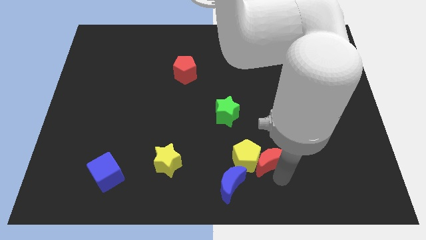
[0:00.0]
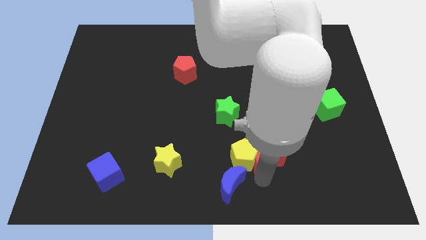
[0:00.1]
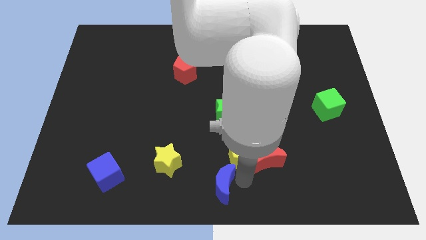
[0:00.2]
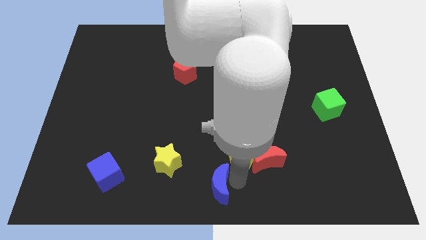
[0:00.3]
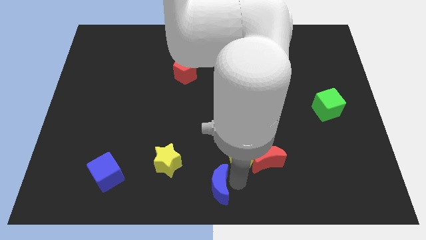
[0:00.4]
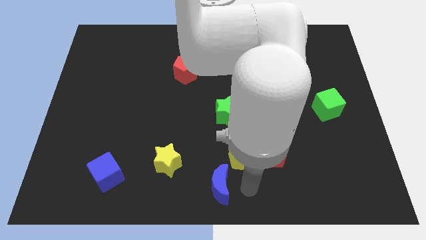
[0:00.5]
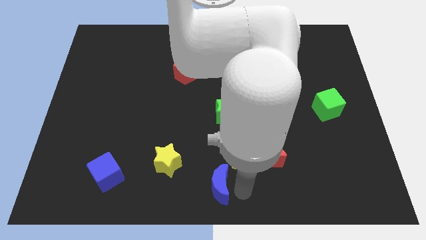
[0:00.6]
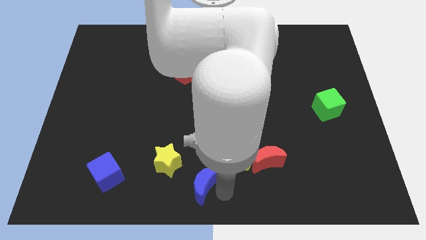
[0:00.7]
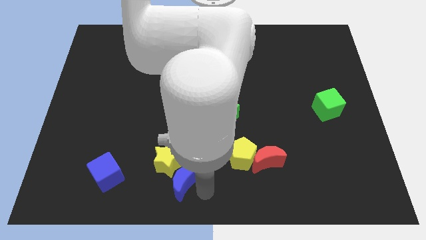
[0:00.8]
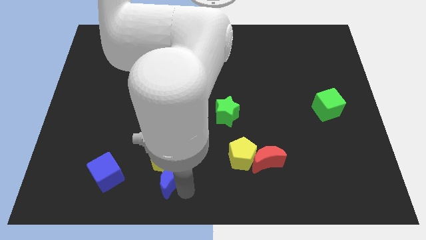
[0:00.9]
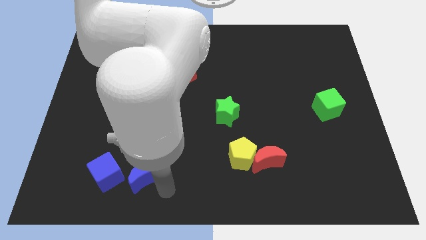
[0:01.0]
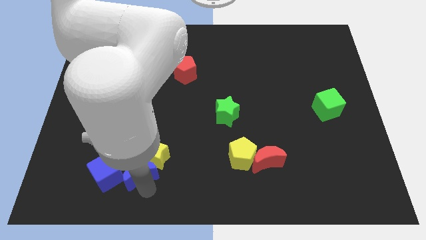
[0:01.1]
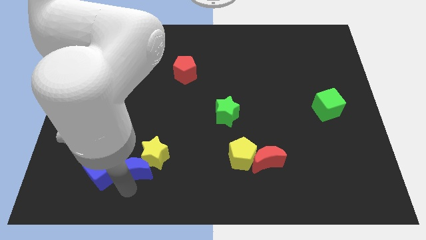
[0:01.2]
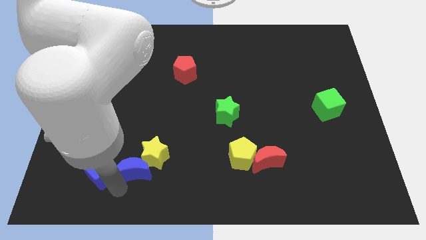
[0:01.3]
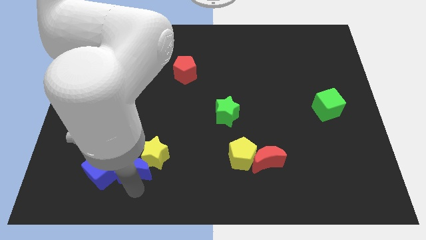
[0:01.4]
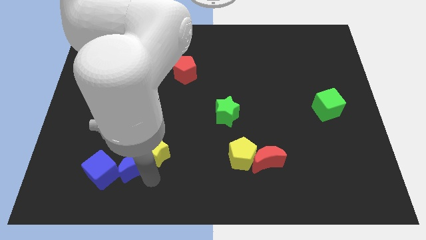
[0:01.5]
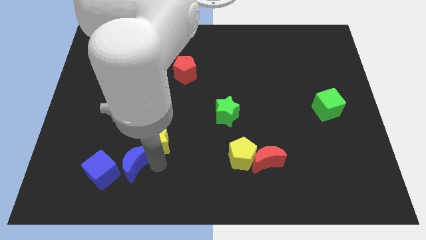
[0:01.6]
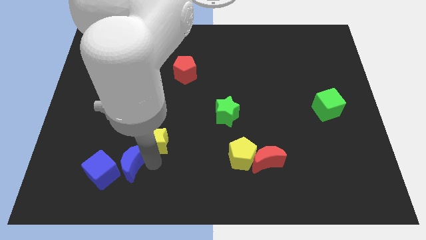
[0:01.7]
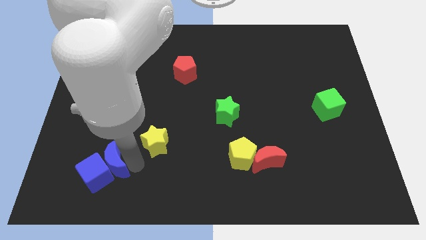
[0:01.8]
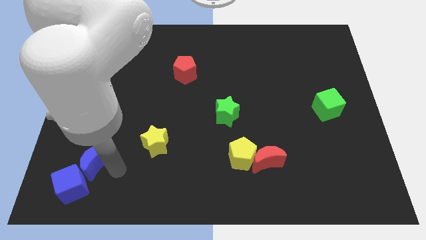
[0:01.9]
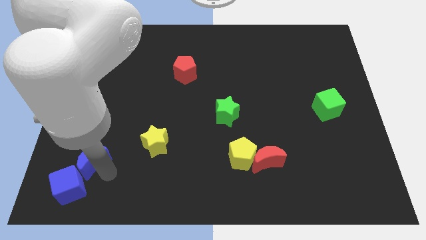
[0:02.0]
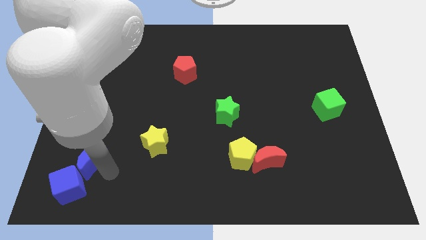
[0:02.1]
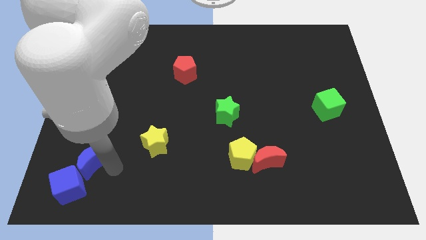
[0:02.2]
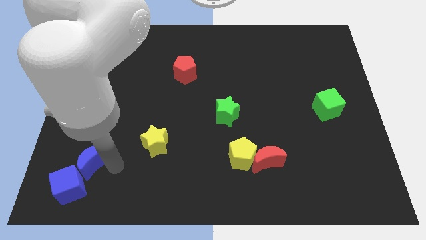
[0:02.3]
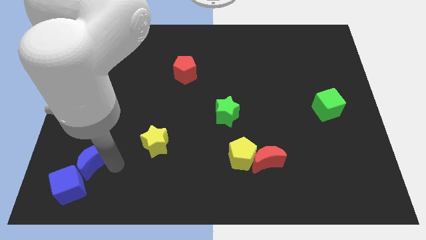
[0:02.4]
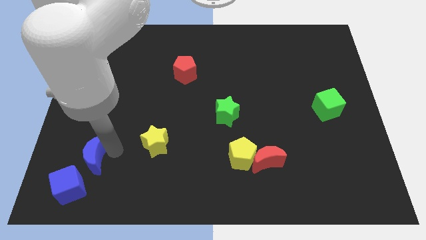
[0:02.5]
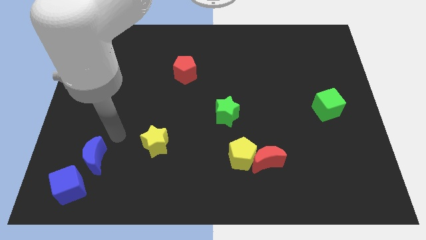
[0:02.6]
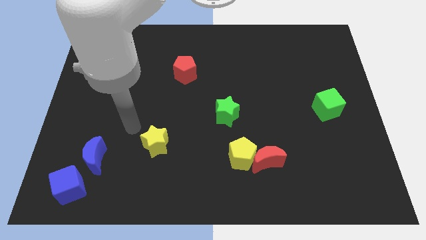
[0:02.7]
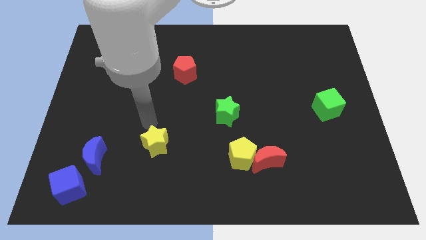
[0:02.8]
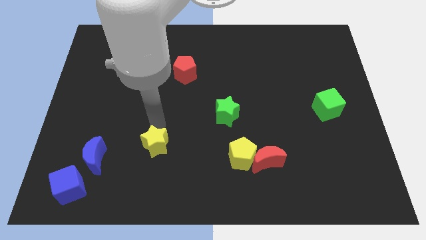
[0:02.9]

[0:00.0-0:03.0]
place the blue crescent to the top right of the blue cube

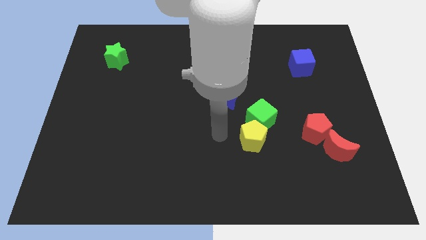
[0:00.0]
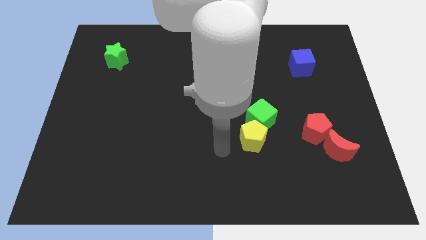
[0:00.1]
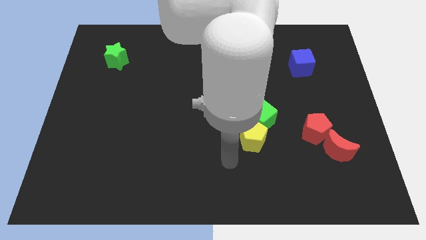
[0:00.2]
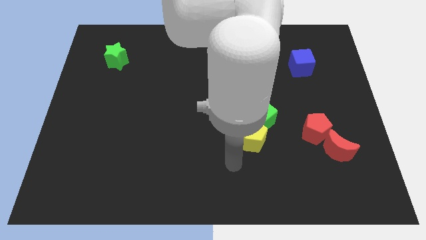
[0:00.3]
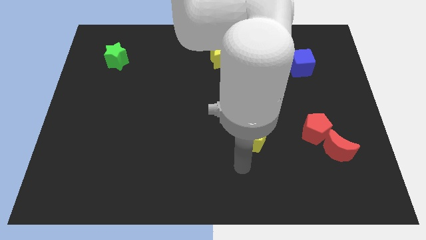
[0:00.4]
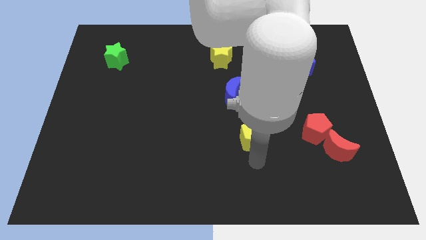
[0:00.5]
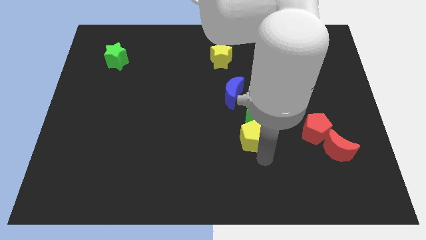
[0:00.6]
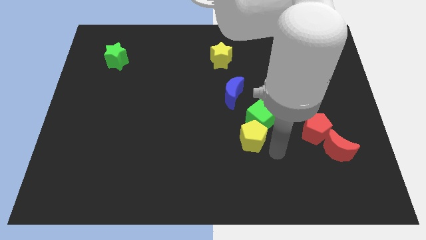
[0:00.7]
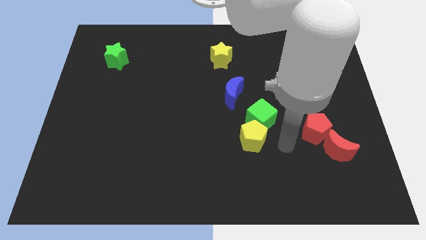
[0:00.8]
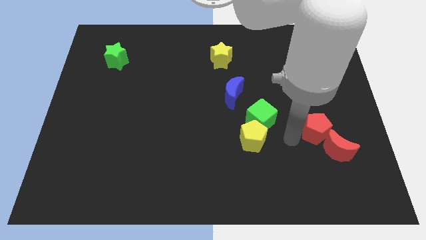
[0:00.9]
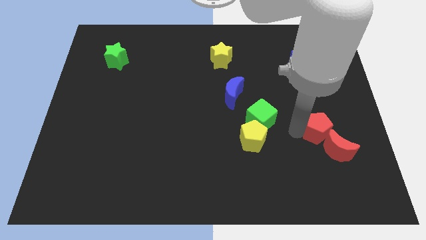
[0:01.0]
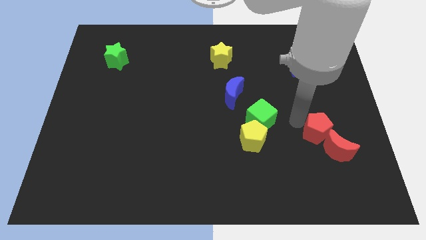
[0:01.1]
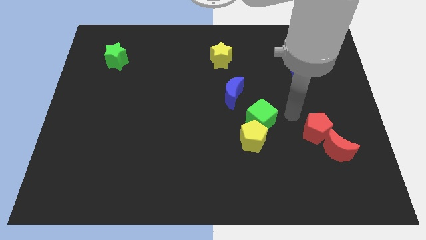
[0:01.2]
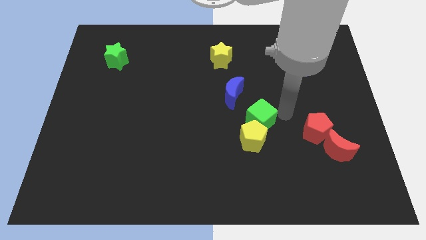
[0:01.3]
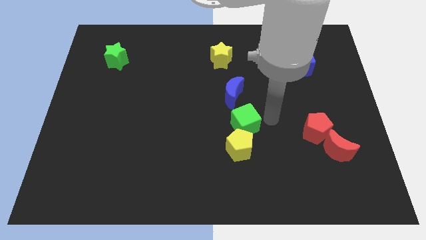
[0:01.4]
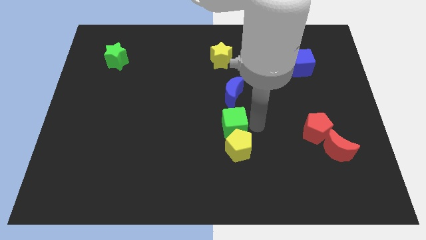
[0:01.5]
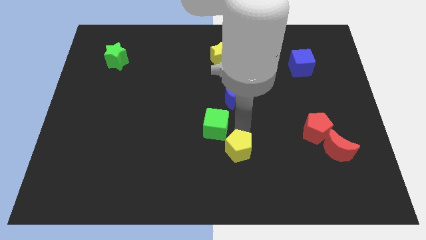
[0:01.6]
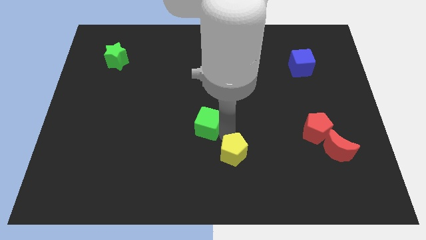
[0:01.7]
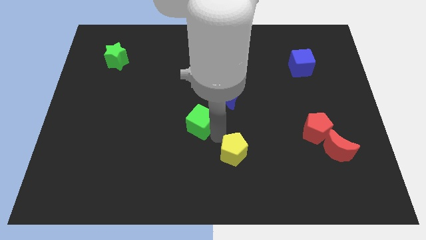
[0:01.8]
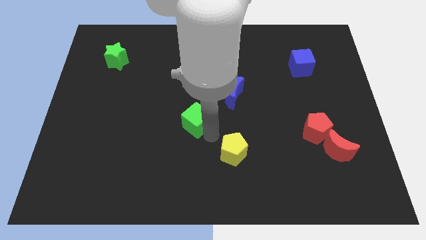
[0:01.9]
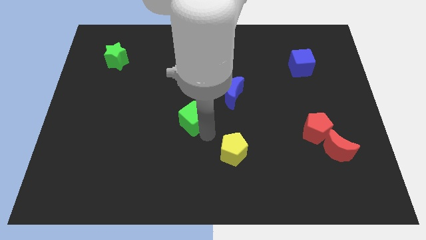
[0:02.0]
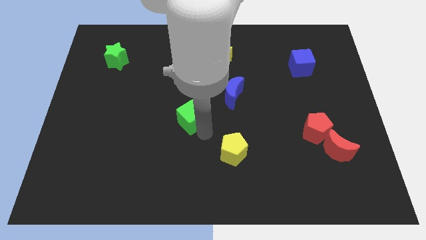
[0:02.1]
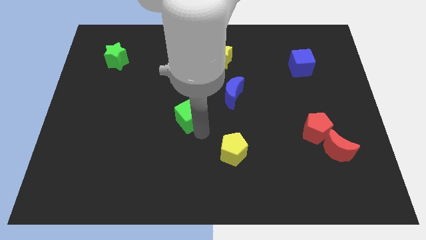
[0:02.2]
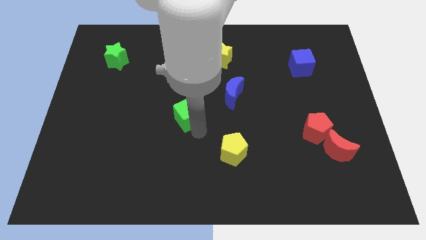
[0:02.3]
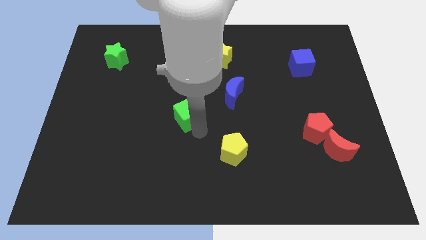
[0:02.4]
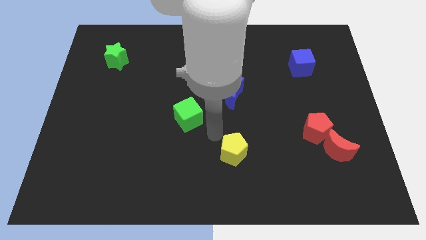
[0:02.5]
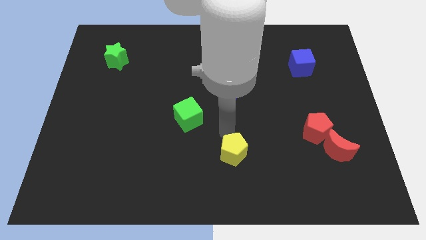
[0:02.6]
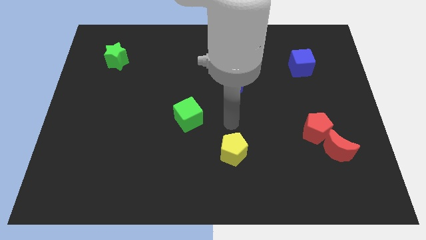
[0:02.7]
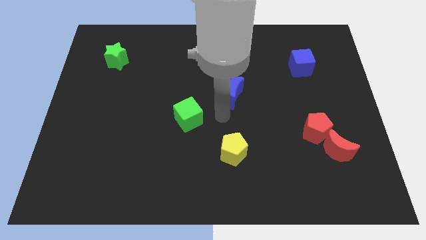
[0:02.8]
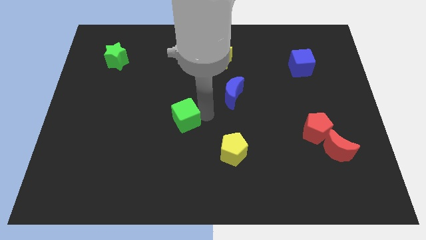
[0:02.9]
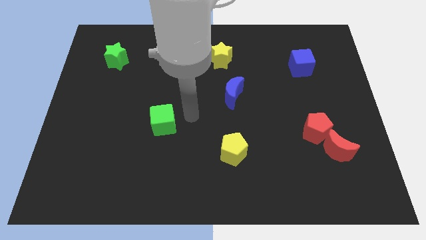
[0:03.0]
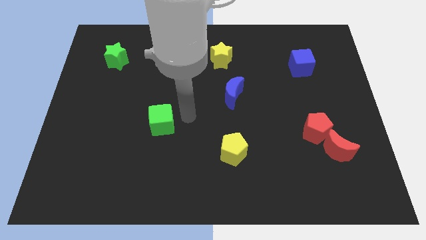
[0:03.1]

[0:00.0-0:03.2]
push the green cube towards the left

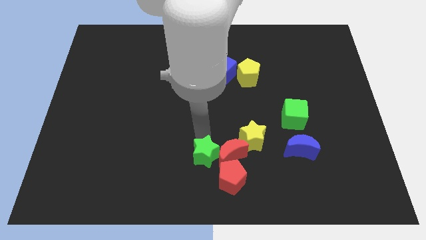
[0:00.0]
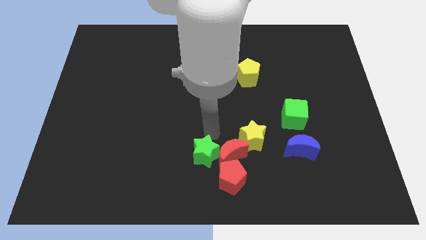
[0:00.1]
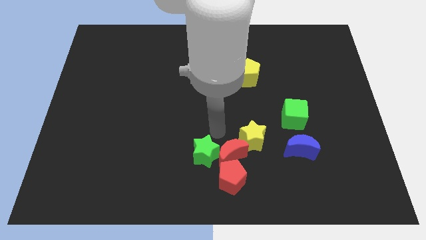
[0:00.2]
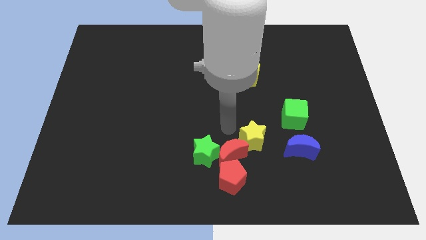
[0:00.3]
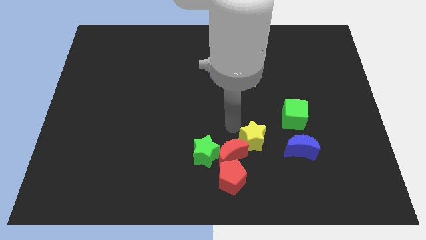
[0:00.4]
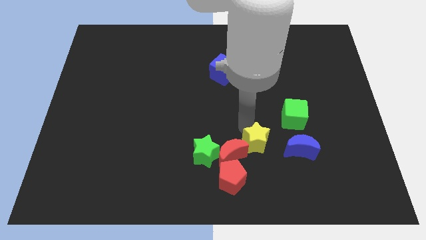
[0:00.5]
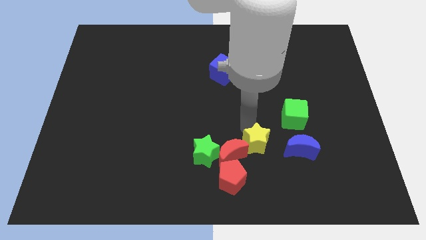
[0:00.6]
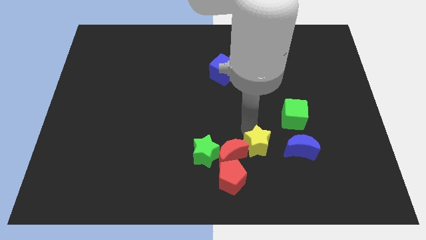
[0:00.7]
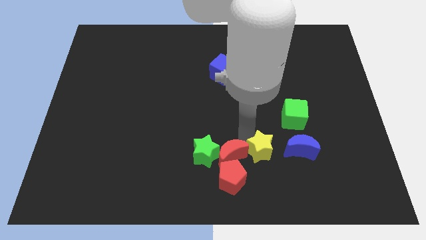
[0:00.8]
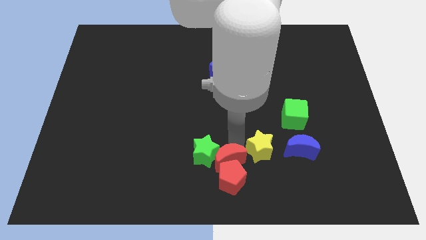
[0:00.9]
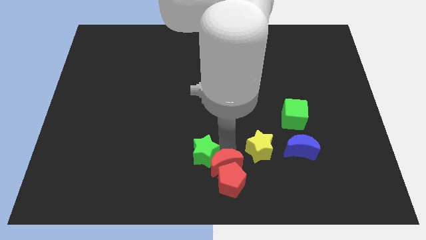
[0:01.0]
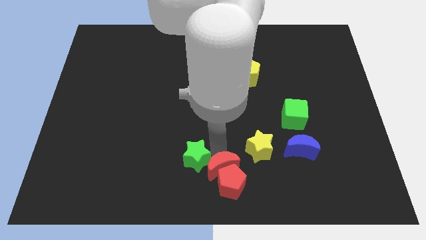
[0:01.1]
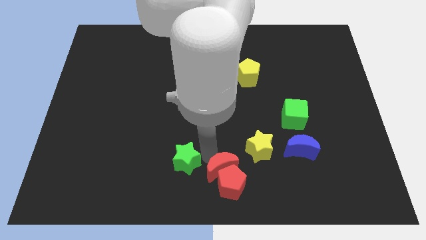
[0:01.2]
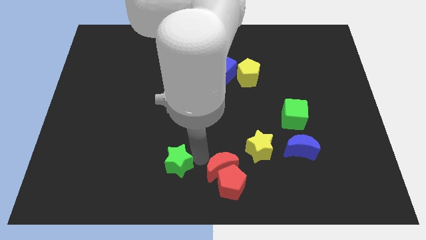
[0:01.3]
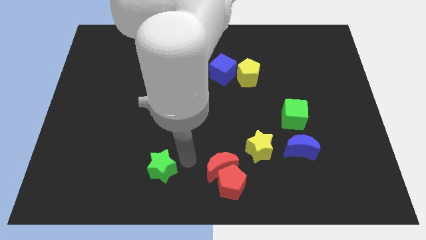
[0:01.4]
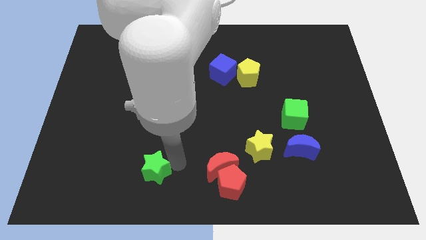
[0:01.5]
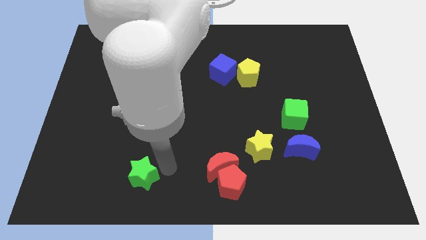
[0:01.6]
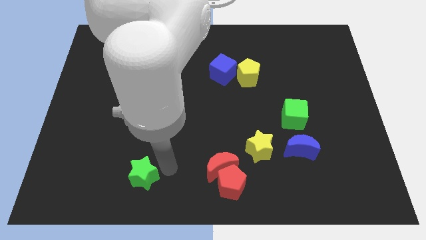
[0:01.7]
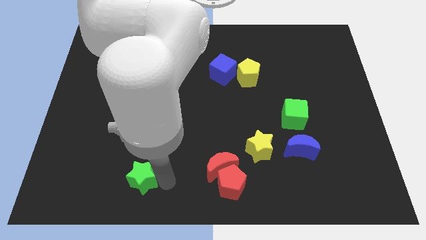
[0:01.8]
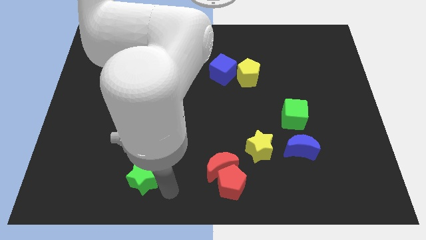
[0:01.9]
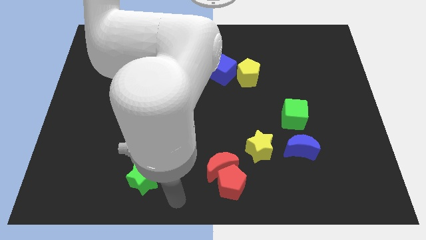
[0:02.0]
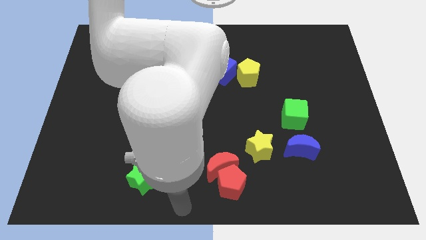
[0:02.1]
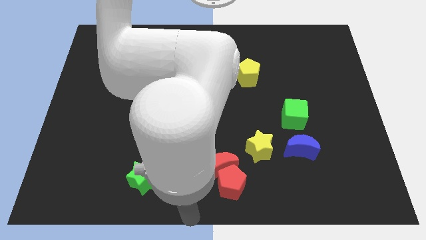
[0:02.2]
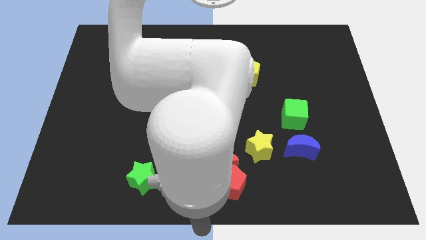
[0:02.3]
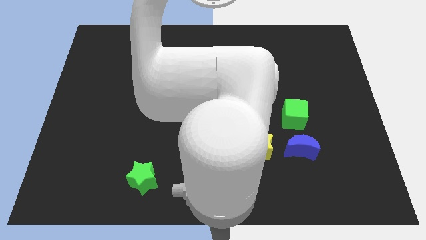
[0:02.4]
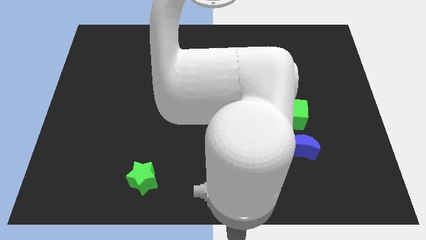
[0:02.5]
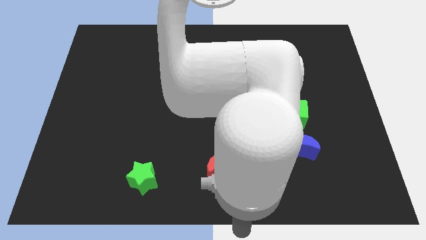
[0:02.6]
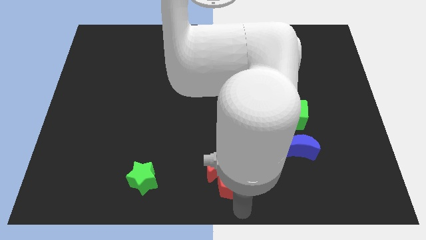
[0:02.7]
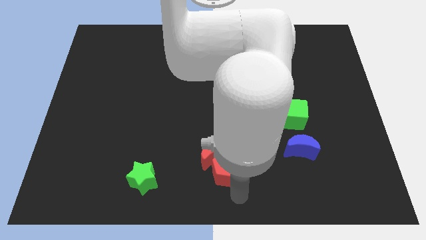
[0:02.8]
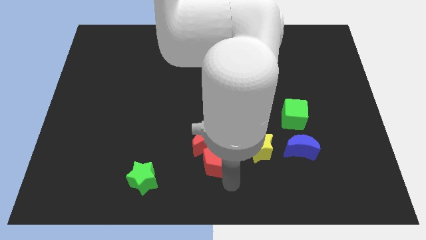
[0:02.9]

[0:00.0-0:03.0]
separate the green star from the yellow star
